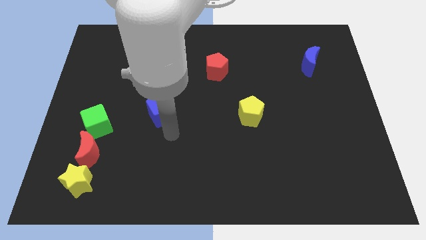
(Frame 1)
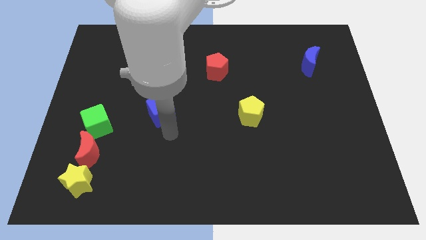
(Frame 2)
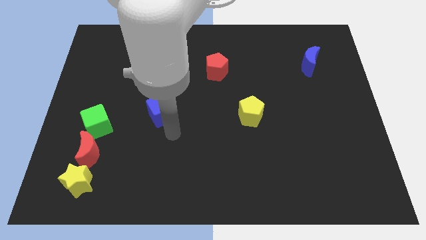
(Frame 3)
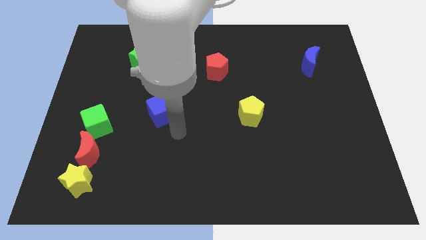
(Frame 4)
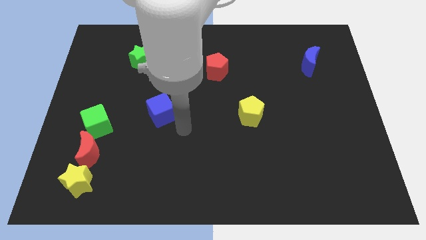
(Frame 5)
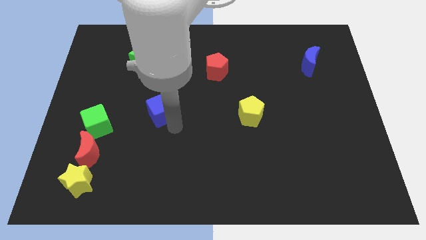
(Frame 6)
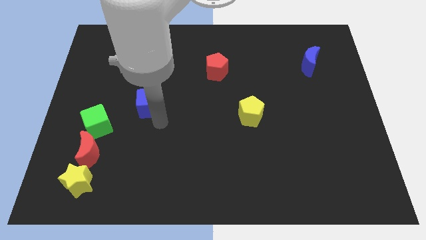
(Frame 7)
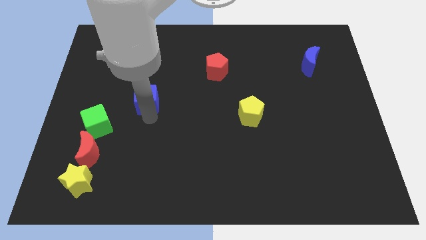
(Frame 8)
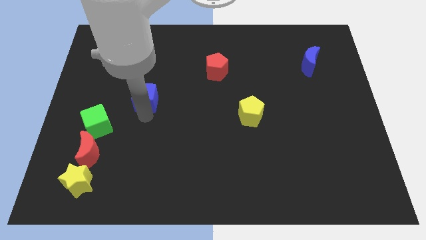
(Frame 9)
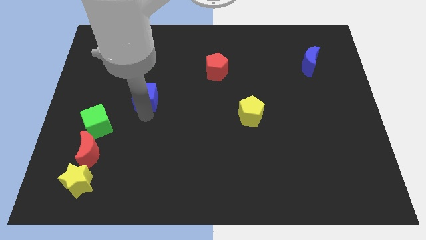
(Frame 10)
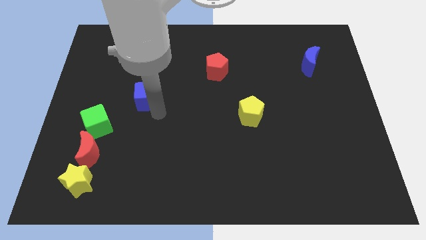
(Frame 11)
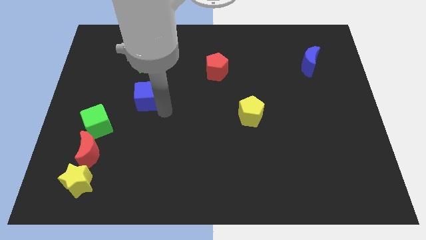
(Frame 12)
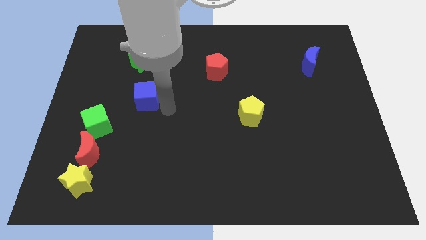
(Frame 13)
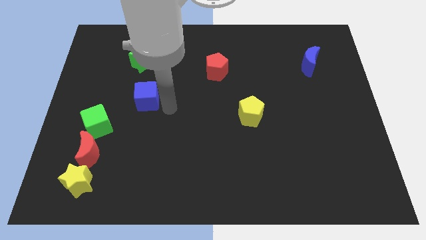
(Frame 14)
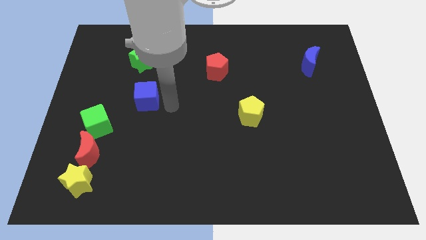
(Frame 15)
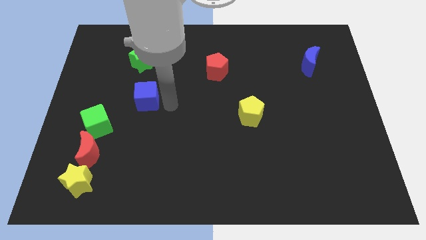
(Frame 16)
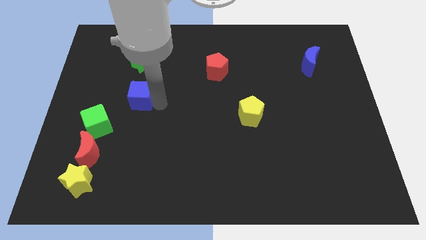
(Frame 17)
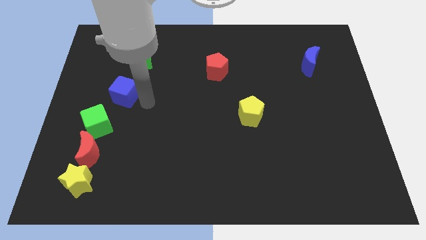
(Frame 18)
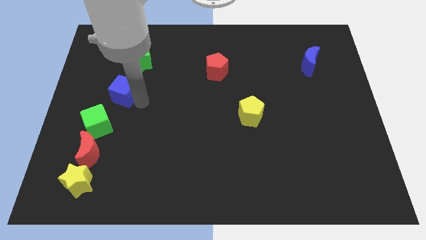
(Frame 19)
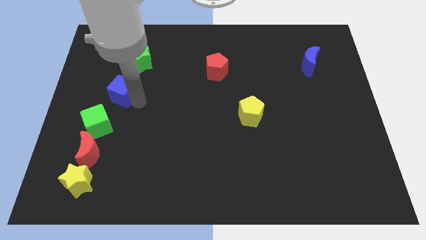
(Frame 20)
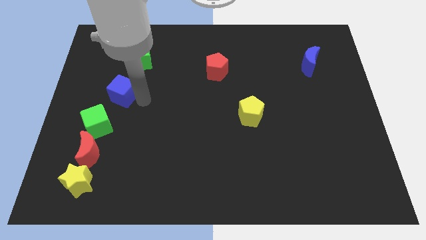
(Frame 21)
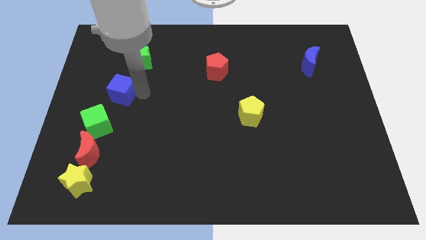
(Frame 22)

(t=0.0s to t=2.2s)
move the blue cube between green cube and green star

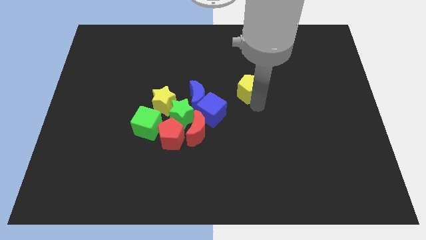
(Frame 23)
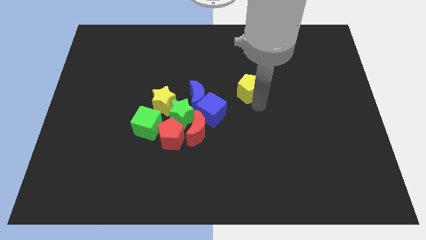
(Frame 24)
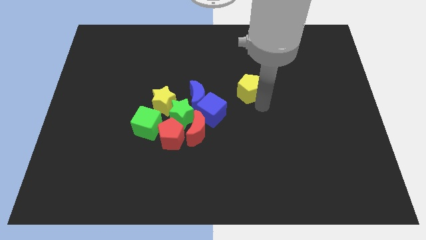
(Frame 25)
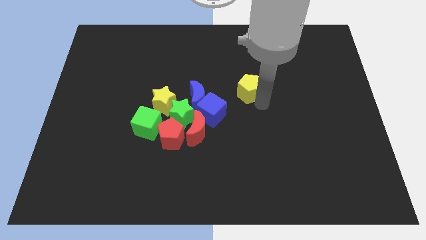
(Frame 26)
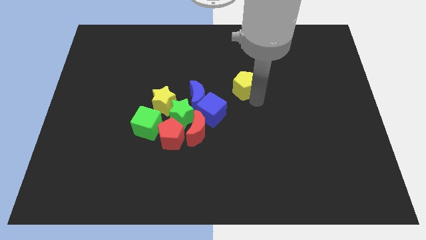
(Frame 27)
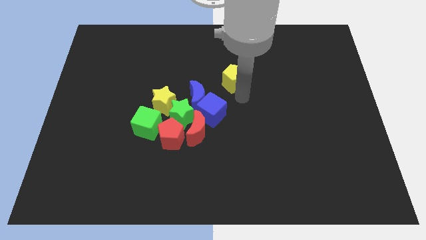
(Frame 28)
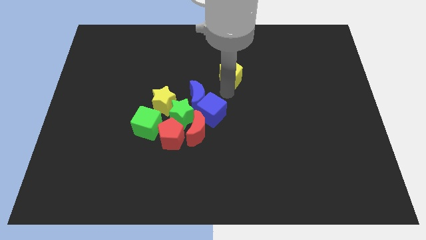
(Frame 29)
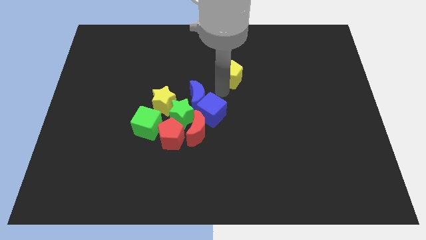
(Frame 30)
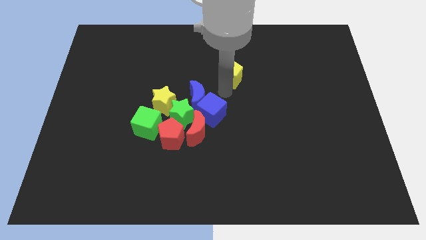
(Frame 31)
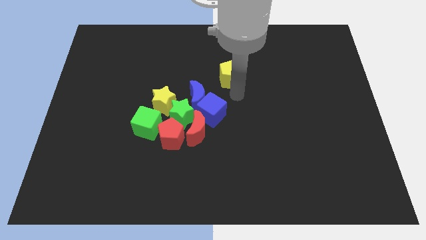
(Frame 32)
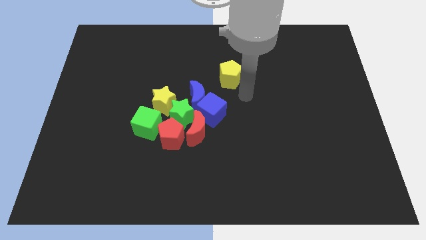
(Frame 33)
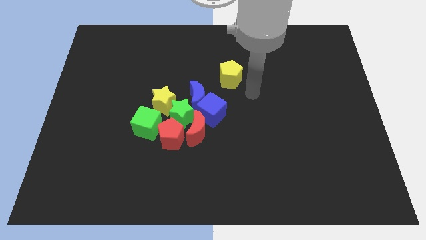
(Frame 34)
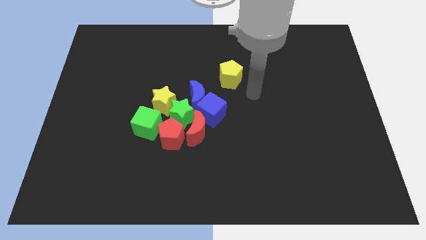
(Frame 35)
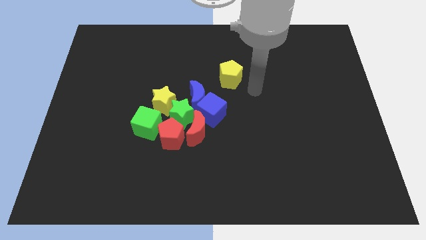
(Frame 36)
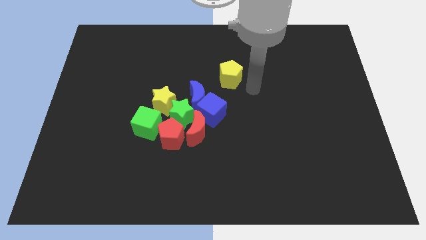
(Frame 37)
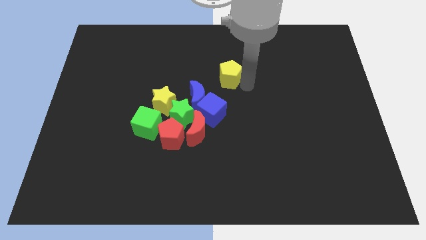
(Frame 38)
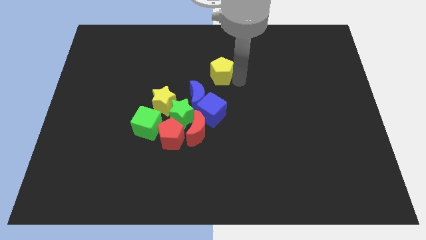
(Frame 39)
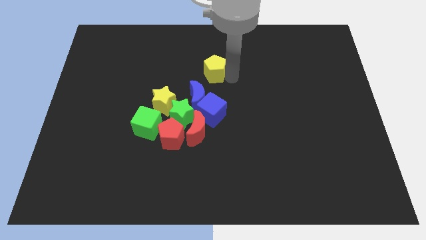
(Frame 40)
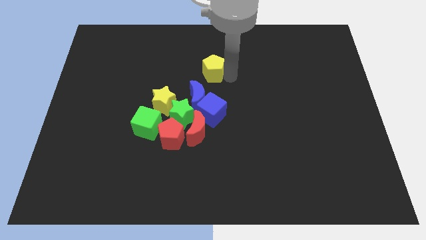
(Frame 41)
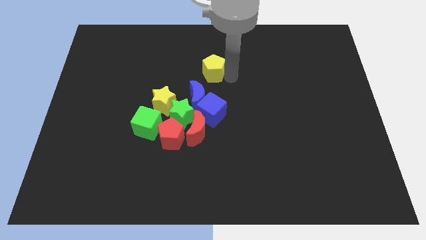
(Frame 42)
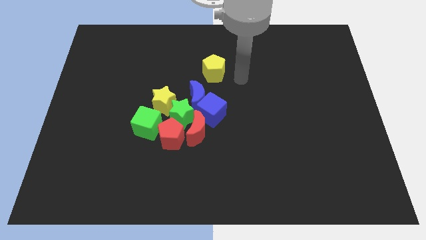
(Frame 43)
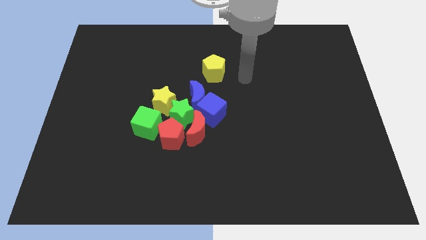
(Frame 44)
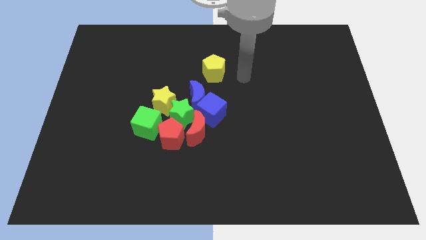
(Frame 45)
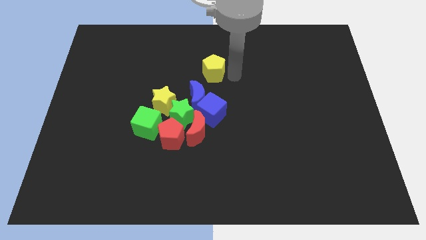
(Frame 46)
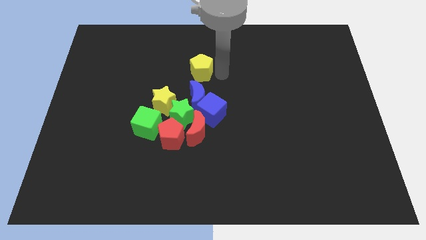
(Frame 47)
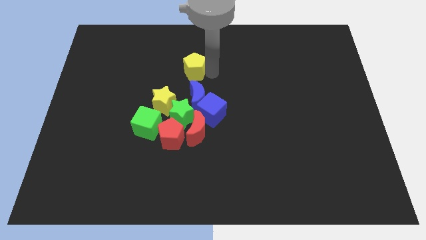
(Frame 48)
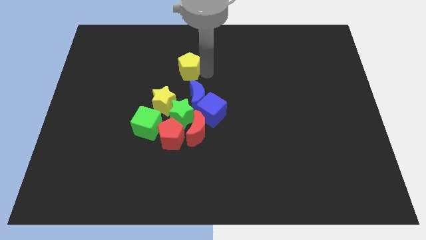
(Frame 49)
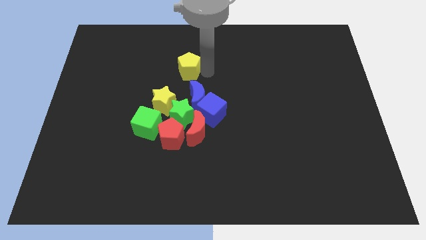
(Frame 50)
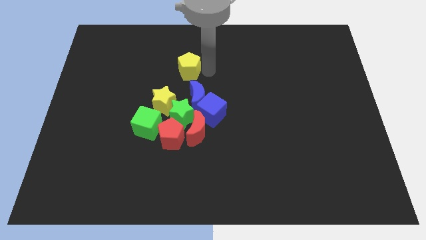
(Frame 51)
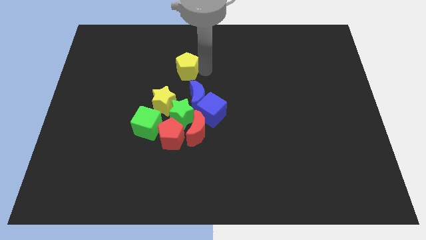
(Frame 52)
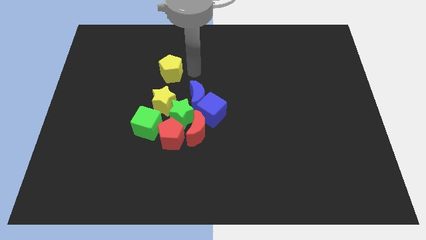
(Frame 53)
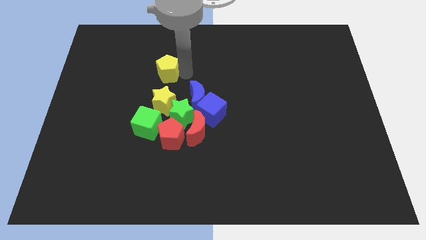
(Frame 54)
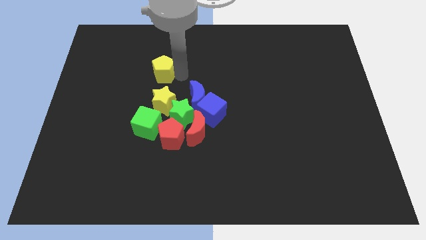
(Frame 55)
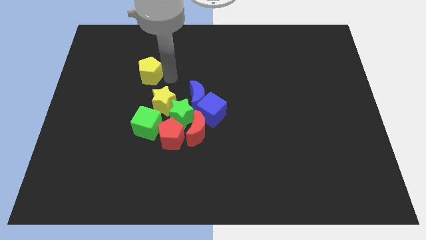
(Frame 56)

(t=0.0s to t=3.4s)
move the yellow pentagon to the top of the green star

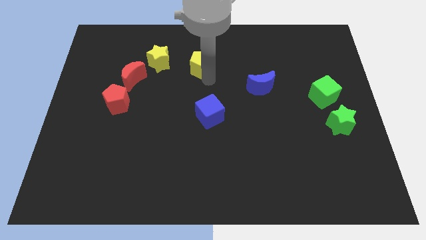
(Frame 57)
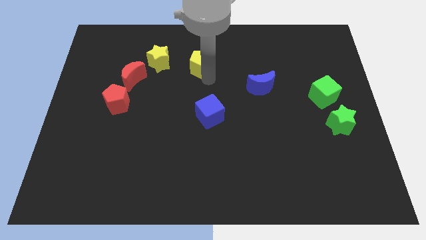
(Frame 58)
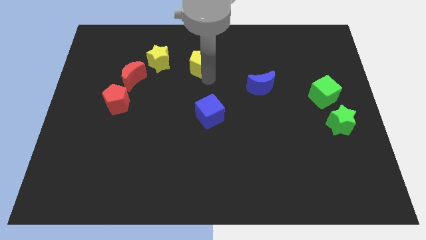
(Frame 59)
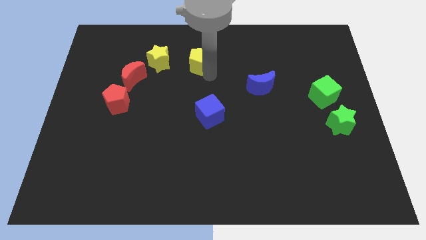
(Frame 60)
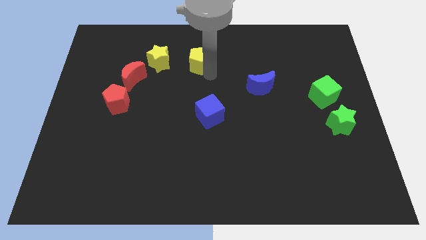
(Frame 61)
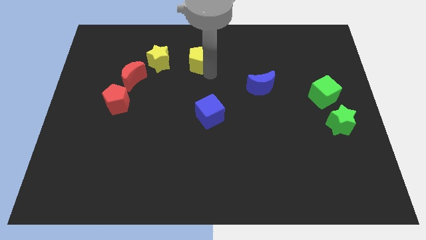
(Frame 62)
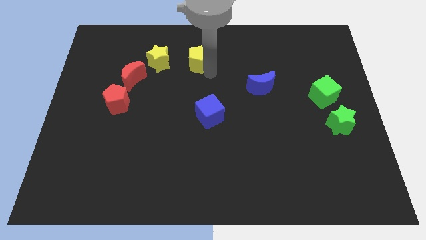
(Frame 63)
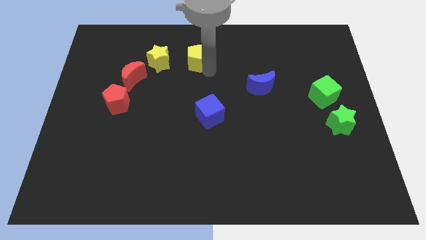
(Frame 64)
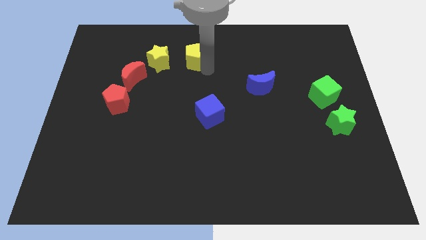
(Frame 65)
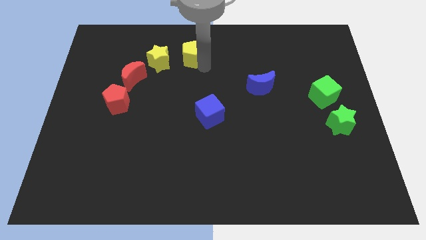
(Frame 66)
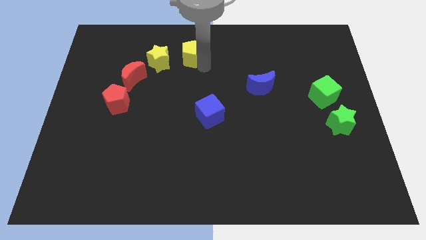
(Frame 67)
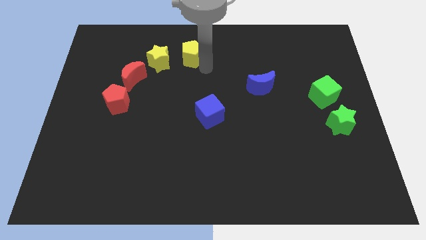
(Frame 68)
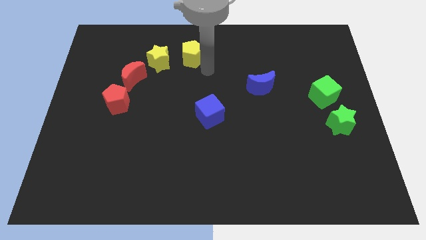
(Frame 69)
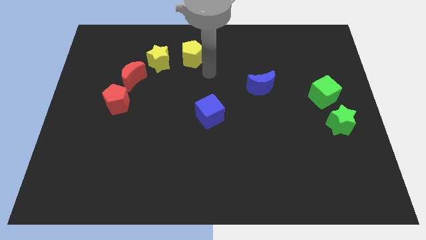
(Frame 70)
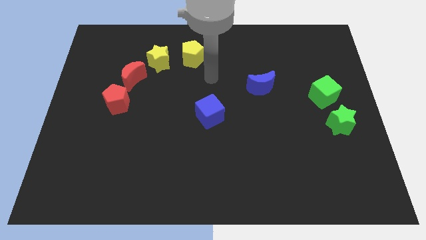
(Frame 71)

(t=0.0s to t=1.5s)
place the yellow pentagon right to the yellow star

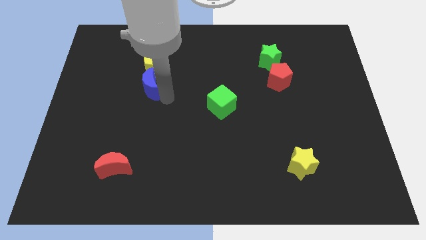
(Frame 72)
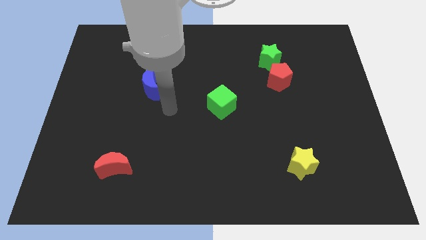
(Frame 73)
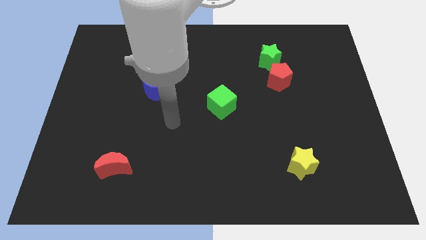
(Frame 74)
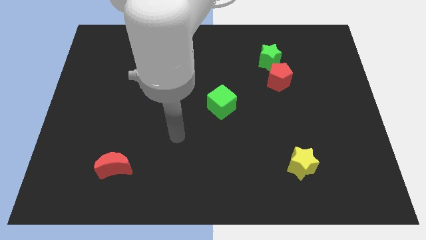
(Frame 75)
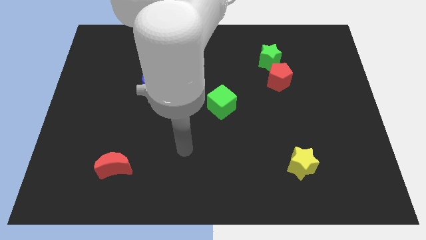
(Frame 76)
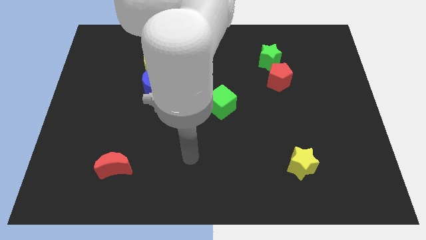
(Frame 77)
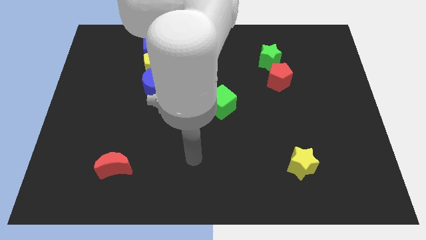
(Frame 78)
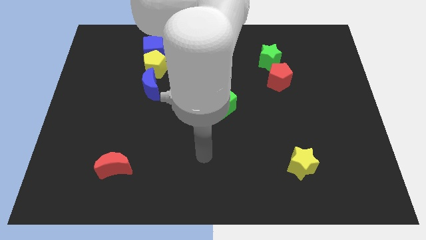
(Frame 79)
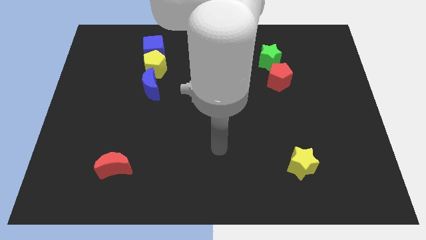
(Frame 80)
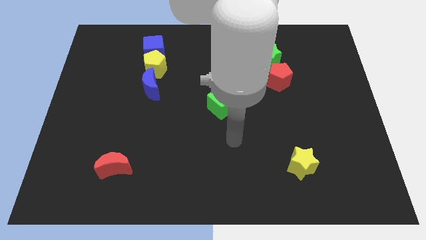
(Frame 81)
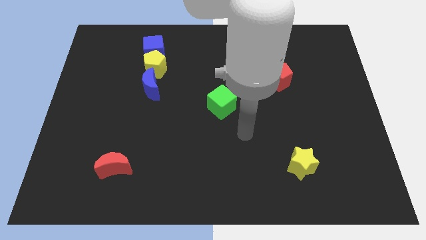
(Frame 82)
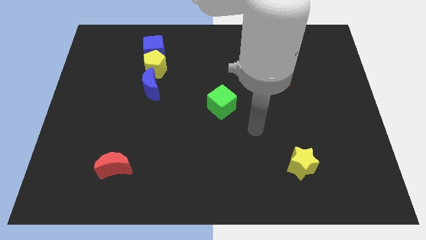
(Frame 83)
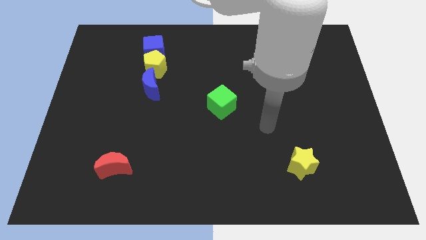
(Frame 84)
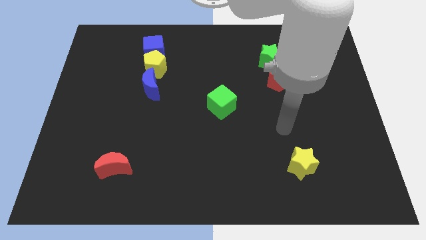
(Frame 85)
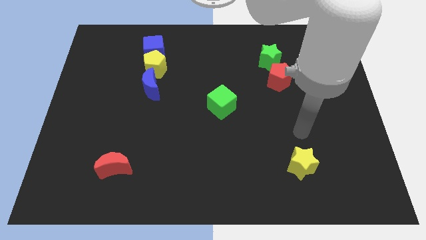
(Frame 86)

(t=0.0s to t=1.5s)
go to the top side of the yellow star

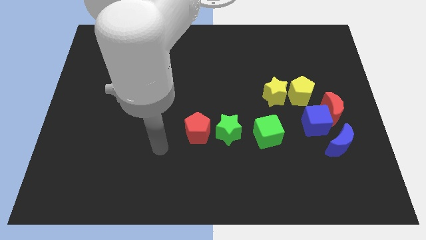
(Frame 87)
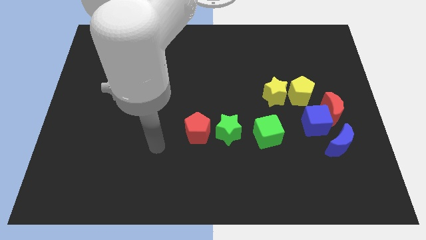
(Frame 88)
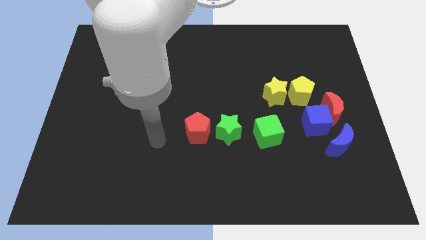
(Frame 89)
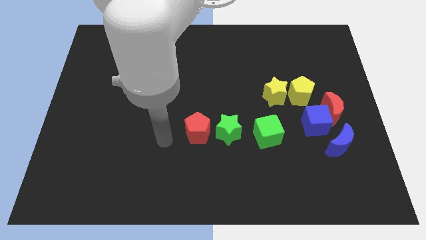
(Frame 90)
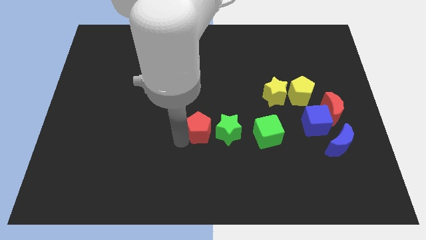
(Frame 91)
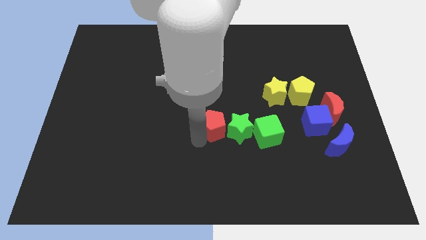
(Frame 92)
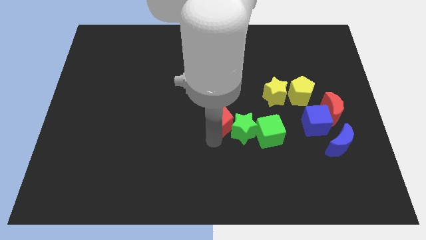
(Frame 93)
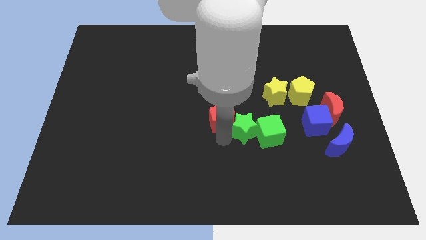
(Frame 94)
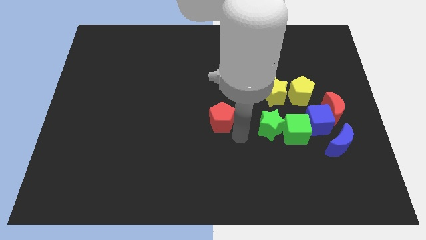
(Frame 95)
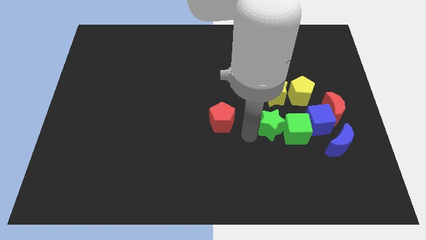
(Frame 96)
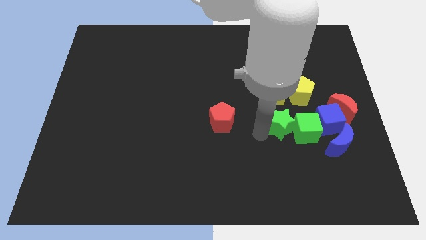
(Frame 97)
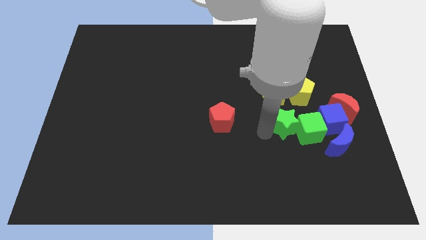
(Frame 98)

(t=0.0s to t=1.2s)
slide green blocks into blue cube
